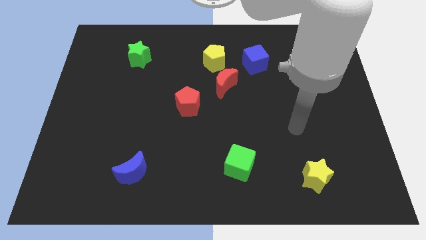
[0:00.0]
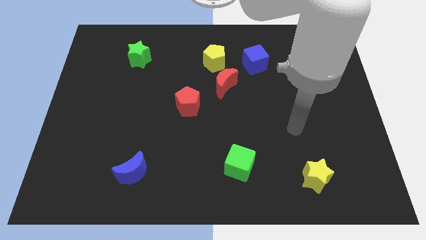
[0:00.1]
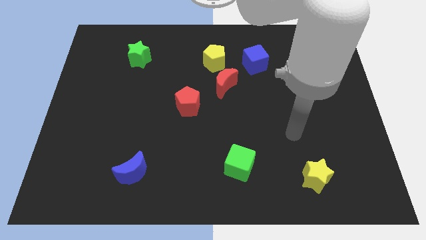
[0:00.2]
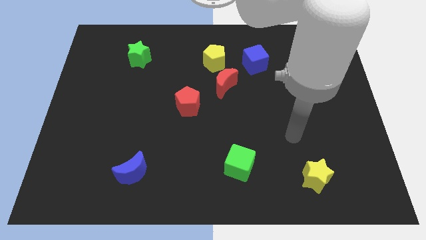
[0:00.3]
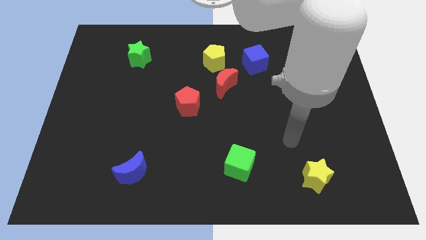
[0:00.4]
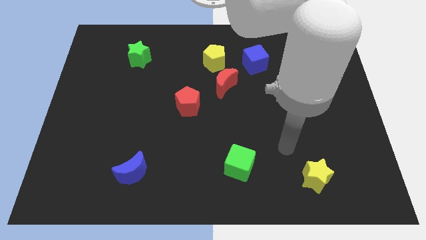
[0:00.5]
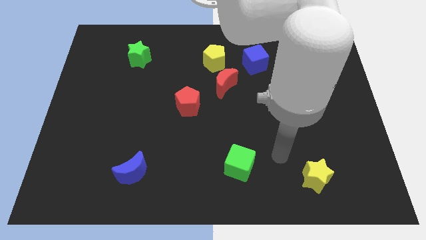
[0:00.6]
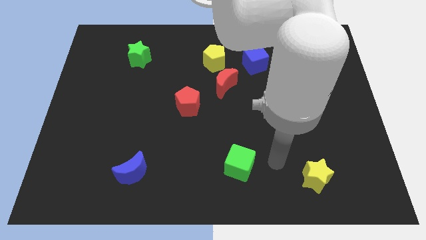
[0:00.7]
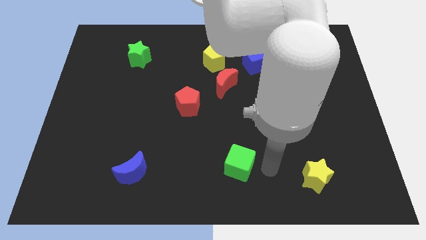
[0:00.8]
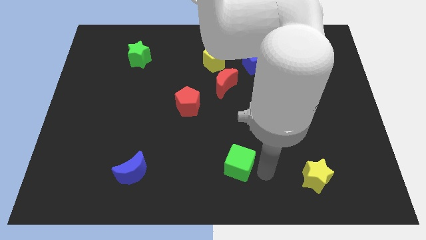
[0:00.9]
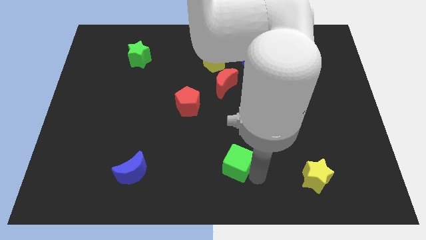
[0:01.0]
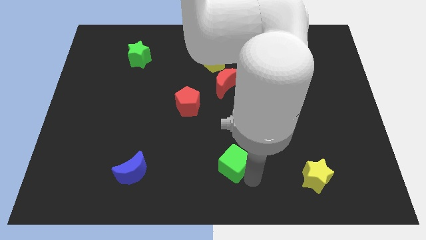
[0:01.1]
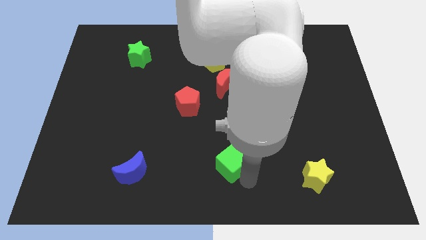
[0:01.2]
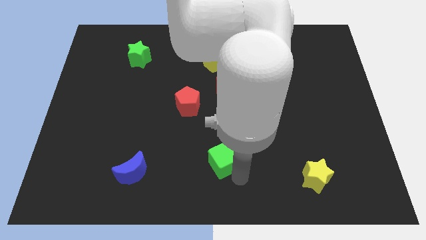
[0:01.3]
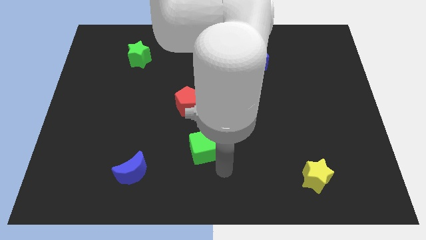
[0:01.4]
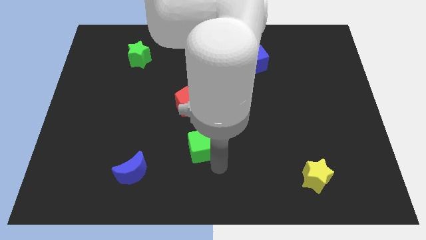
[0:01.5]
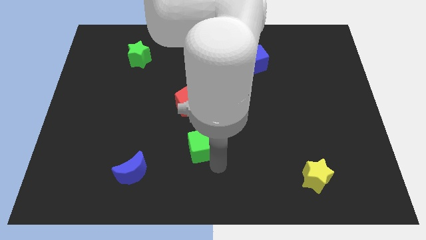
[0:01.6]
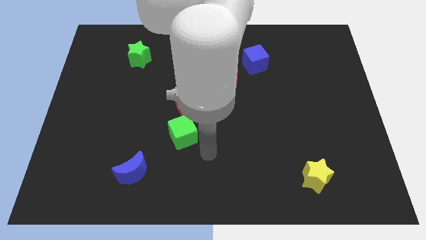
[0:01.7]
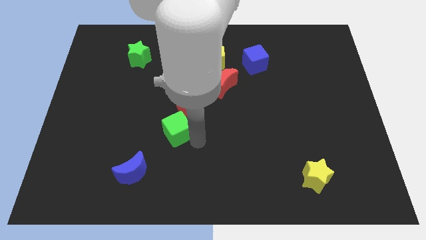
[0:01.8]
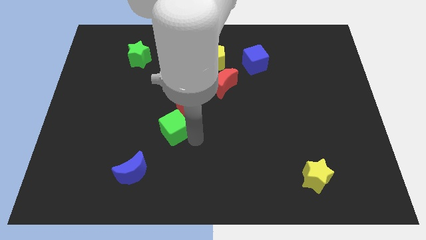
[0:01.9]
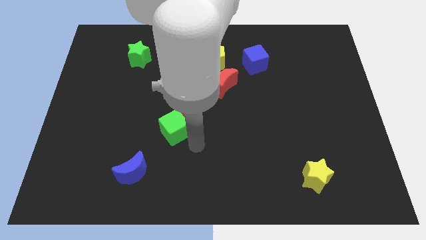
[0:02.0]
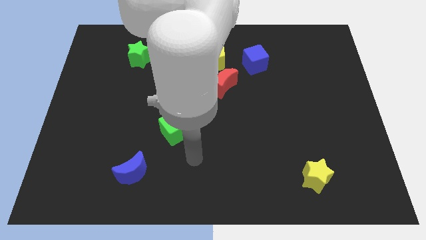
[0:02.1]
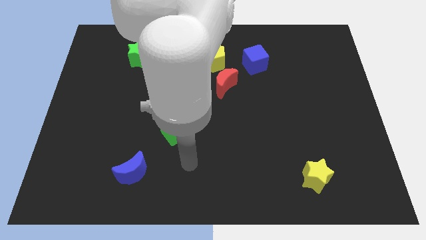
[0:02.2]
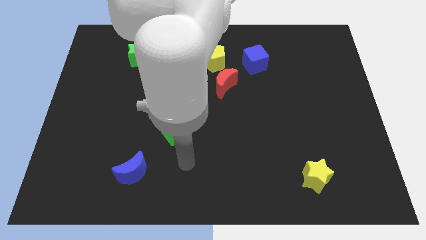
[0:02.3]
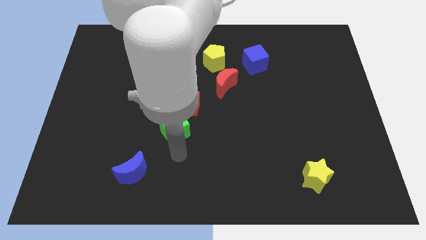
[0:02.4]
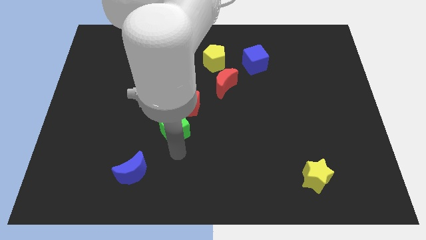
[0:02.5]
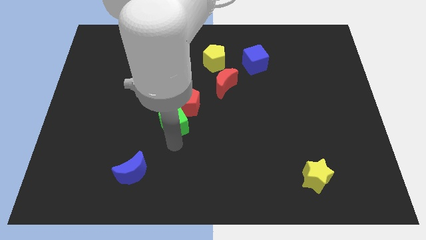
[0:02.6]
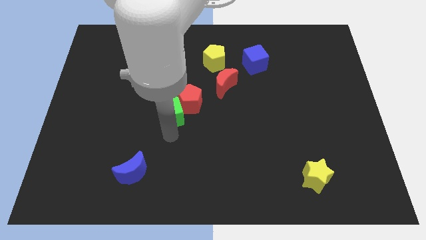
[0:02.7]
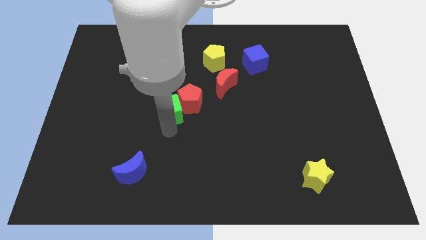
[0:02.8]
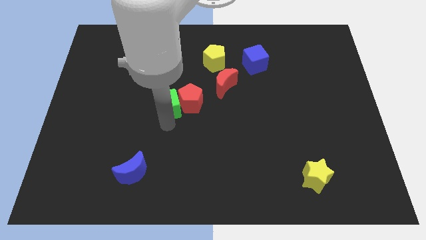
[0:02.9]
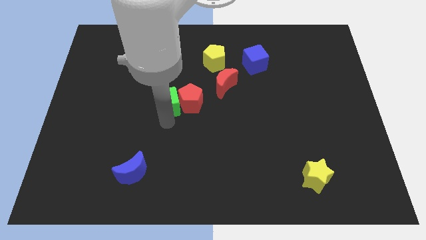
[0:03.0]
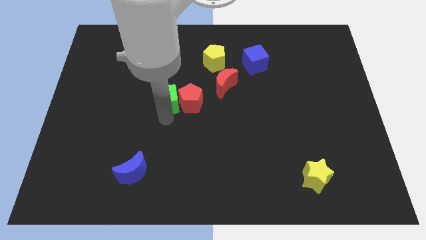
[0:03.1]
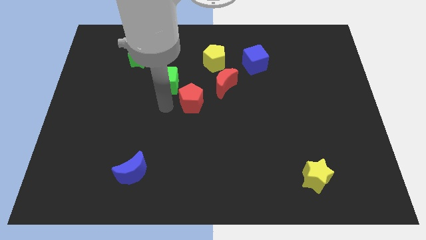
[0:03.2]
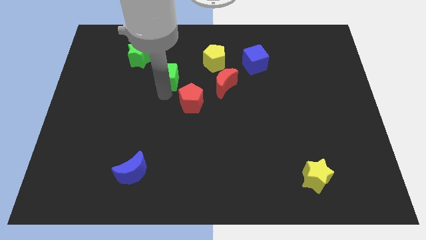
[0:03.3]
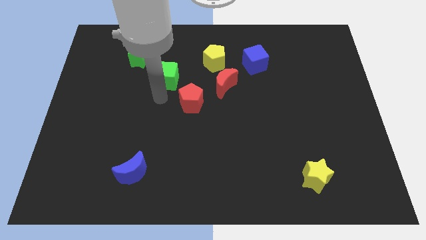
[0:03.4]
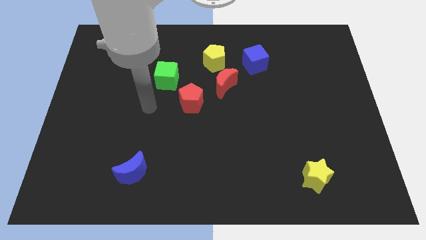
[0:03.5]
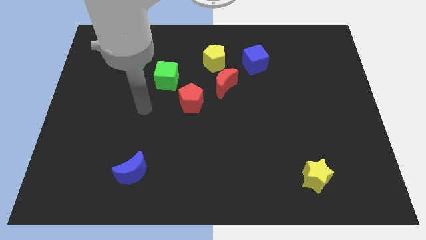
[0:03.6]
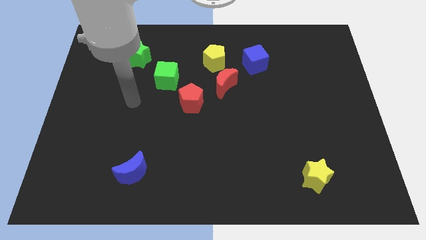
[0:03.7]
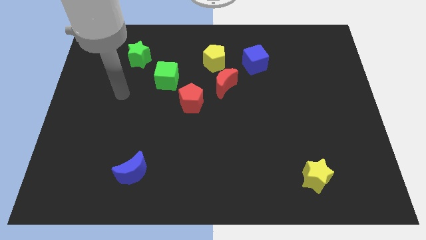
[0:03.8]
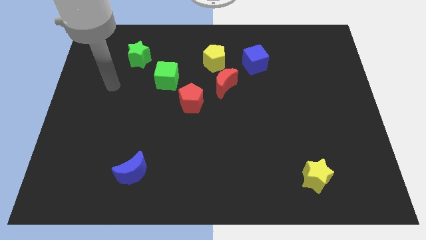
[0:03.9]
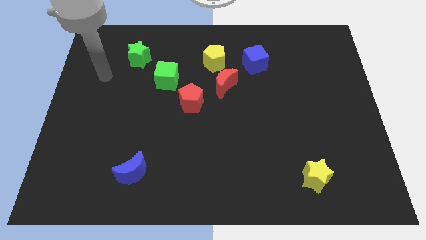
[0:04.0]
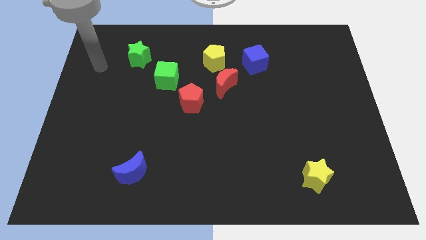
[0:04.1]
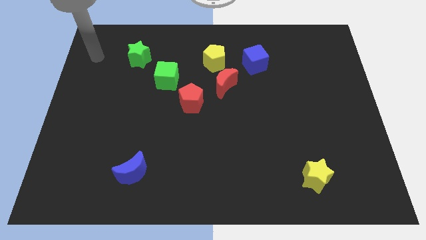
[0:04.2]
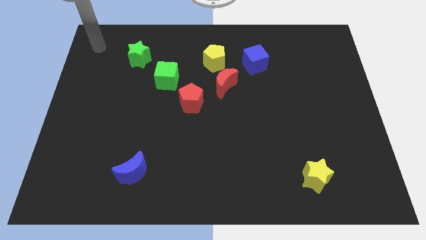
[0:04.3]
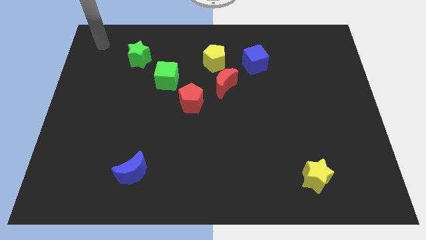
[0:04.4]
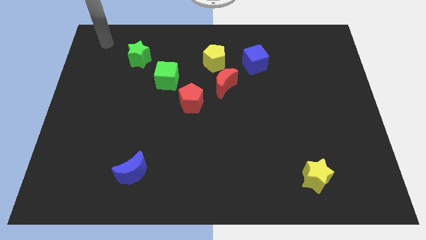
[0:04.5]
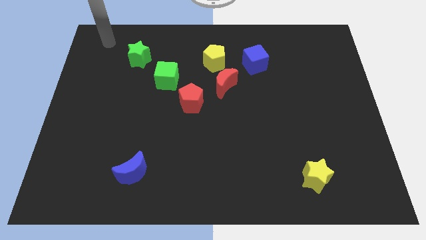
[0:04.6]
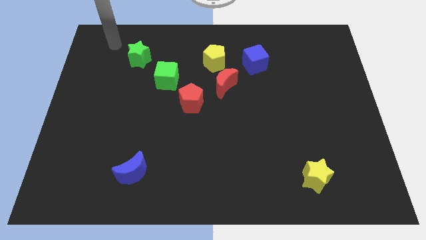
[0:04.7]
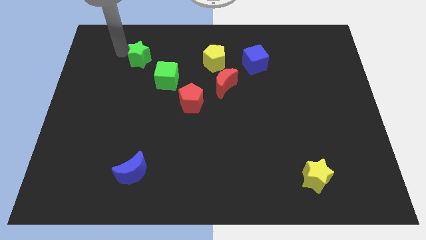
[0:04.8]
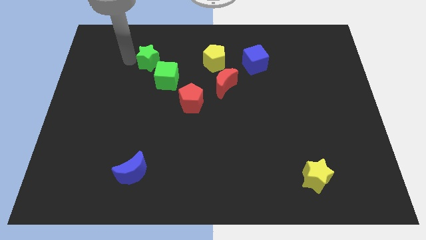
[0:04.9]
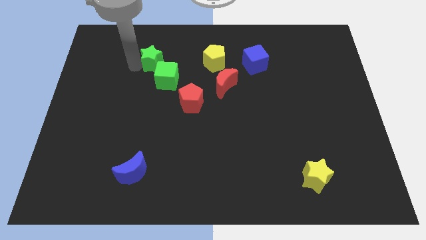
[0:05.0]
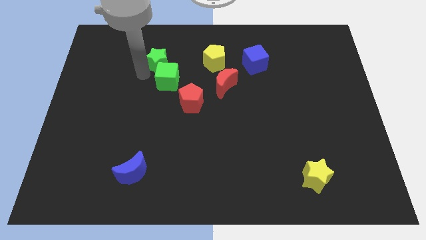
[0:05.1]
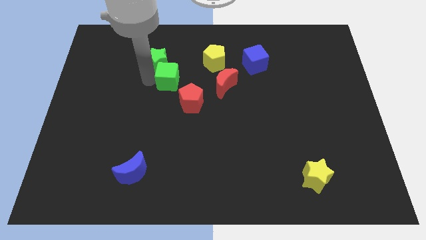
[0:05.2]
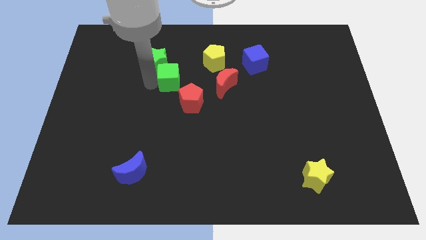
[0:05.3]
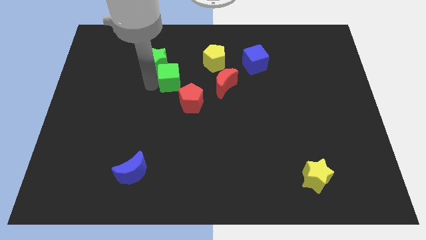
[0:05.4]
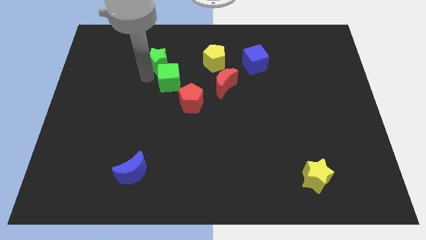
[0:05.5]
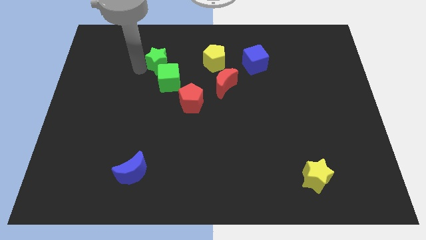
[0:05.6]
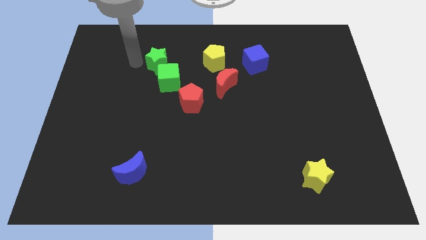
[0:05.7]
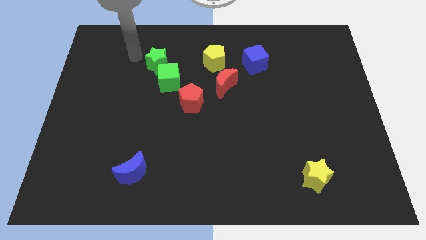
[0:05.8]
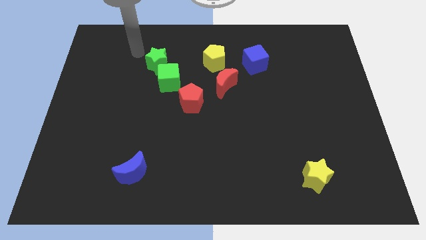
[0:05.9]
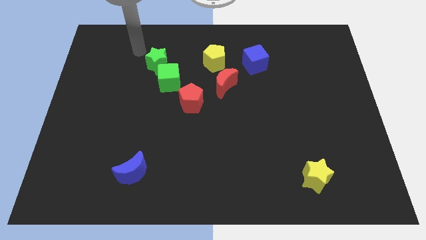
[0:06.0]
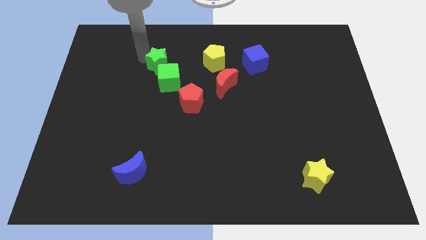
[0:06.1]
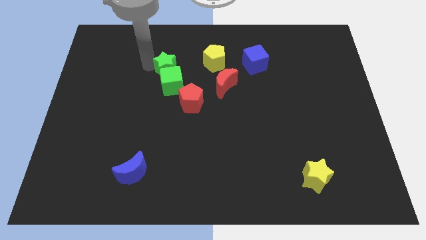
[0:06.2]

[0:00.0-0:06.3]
place the green cube below the green star

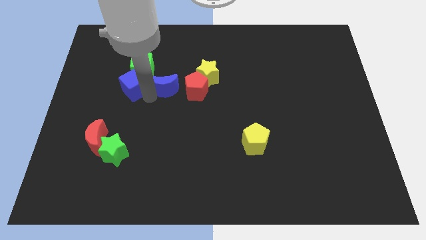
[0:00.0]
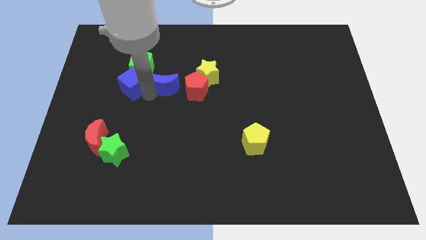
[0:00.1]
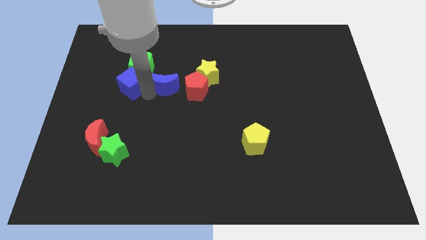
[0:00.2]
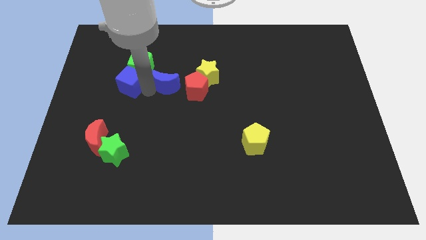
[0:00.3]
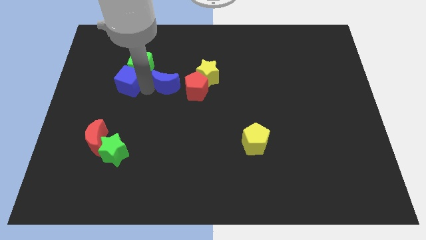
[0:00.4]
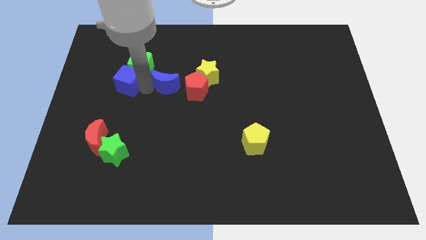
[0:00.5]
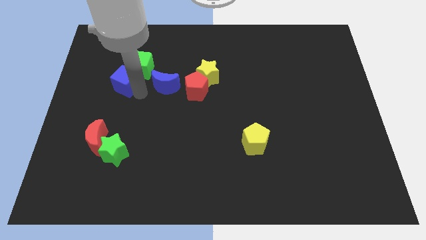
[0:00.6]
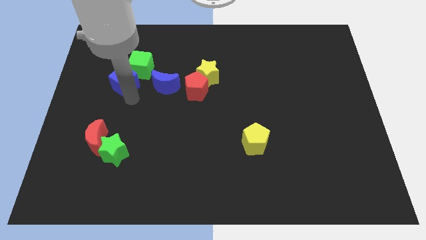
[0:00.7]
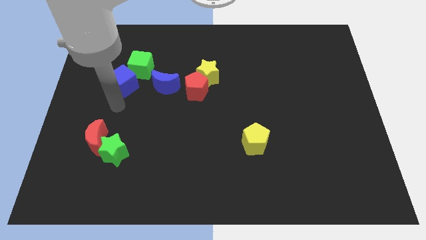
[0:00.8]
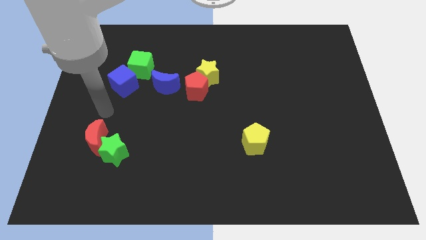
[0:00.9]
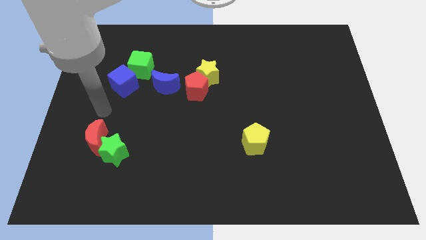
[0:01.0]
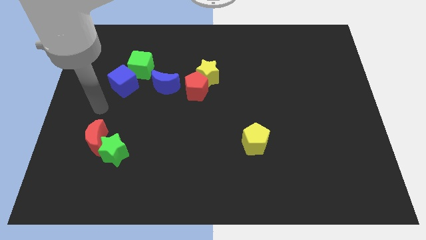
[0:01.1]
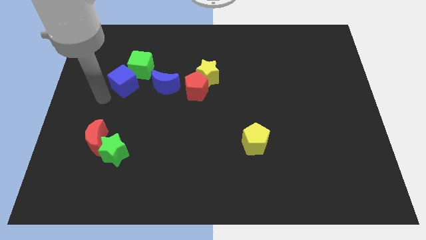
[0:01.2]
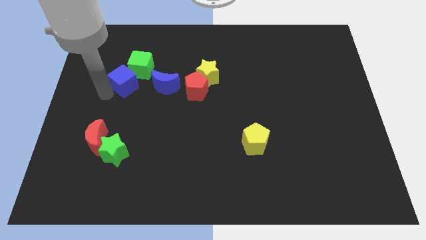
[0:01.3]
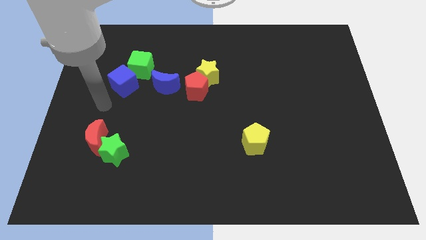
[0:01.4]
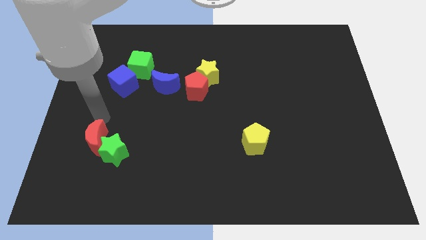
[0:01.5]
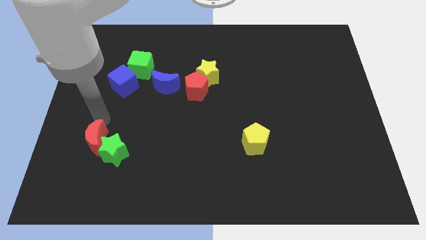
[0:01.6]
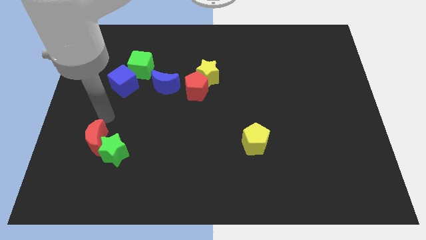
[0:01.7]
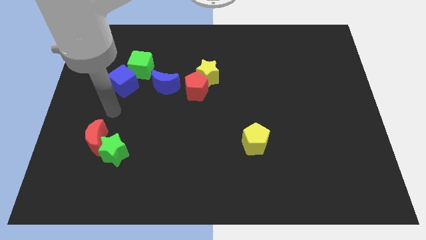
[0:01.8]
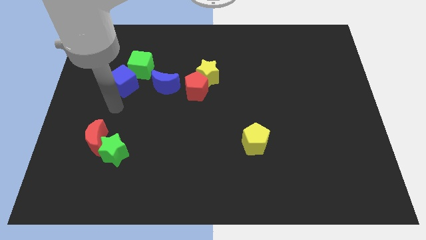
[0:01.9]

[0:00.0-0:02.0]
push the blue cube into the green cube

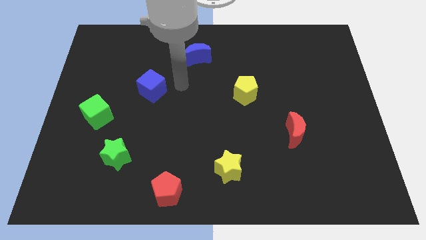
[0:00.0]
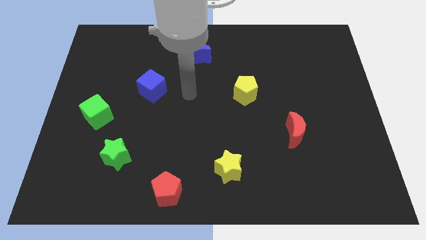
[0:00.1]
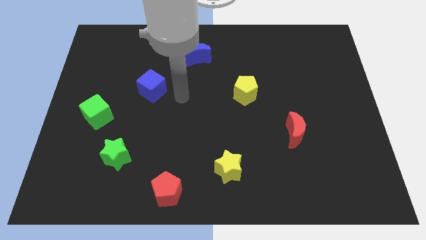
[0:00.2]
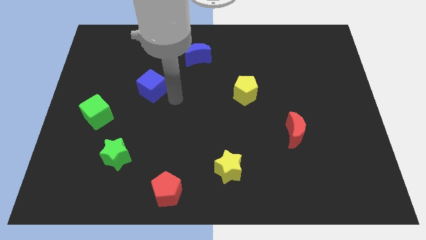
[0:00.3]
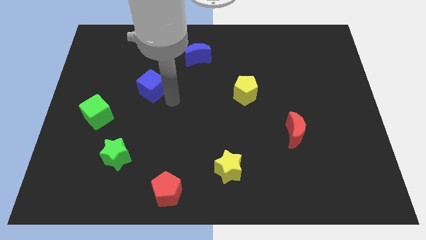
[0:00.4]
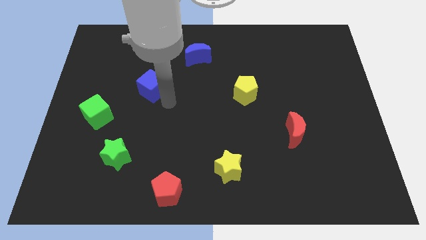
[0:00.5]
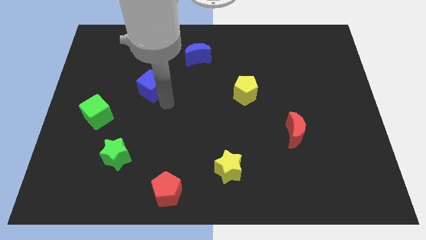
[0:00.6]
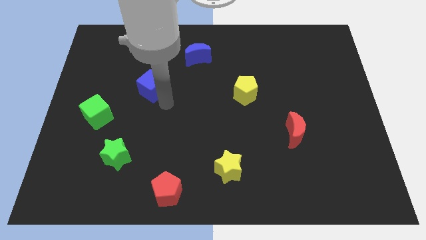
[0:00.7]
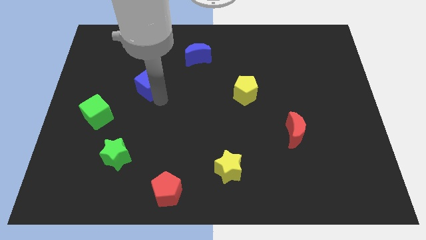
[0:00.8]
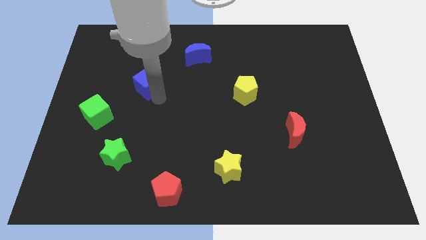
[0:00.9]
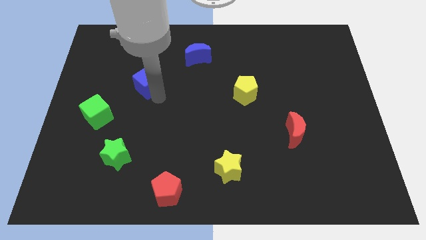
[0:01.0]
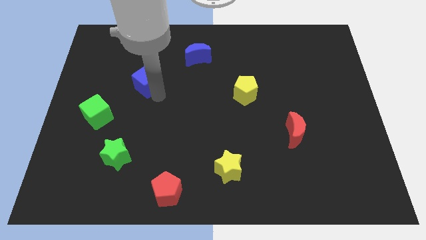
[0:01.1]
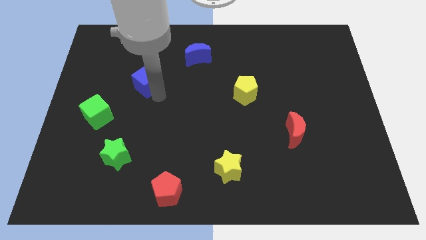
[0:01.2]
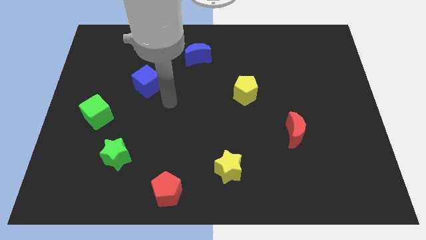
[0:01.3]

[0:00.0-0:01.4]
move the blue cube to the left of the board
